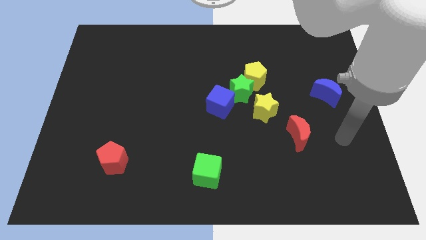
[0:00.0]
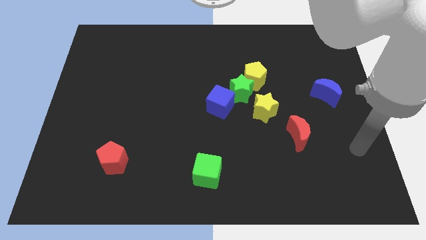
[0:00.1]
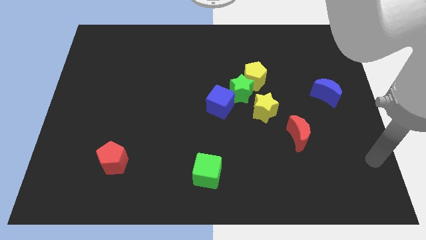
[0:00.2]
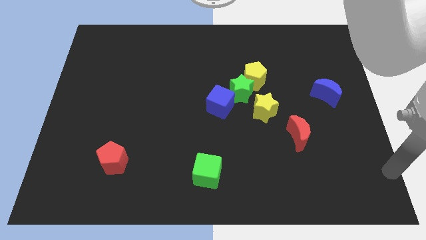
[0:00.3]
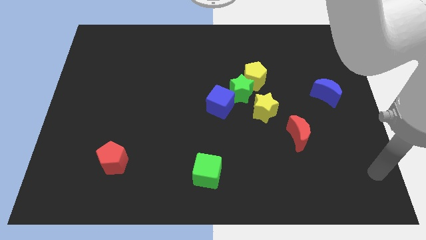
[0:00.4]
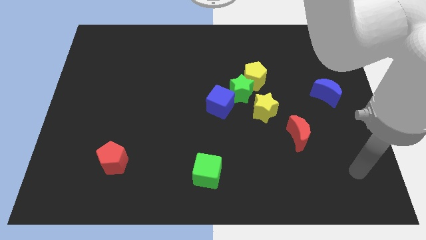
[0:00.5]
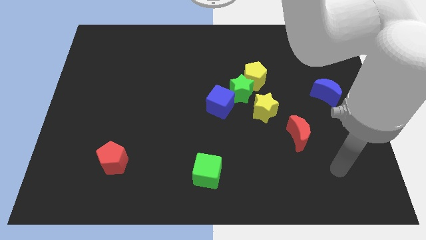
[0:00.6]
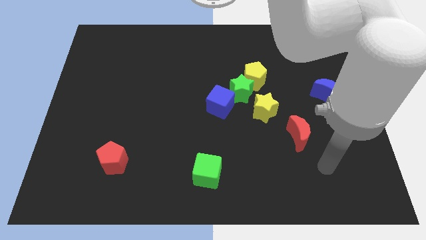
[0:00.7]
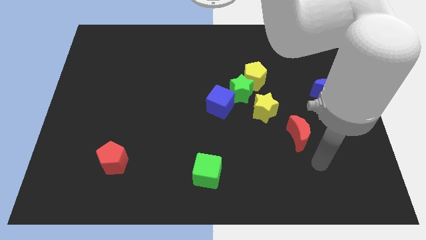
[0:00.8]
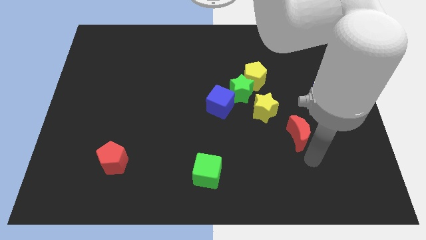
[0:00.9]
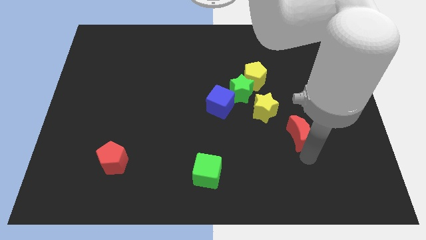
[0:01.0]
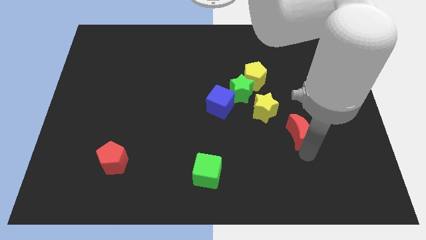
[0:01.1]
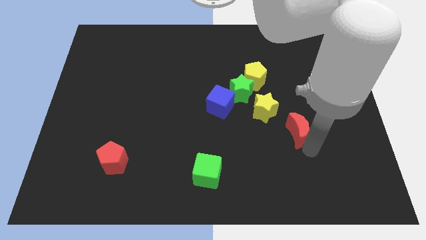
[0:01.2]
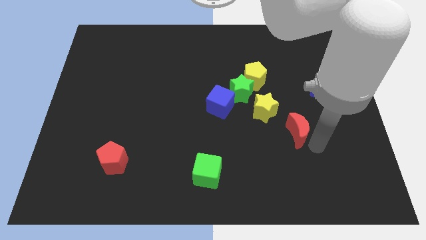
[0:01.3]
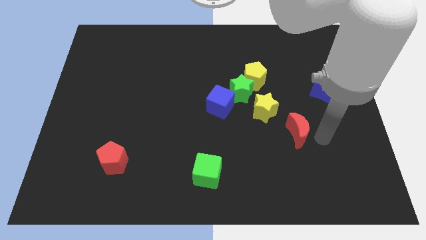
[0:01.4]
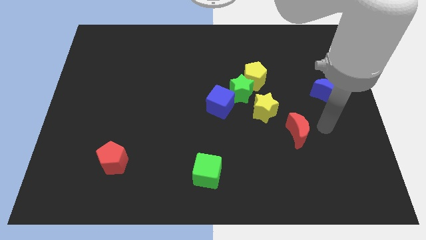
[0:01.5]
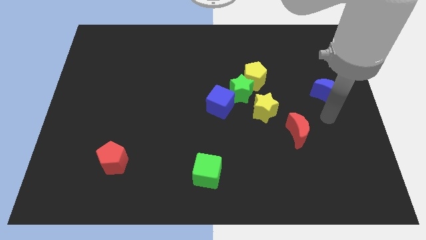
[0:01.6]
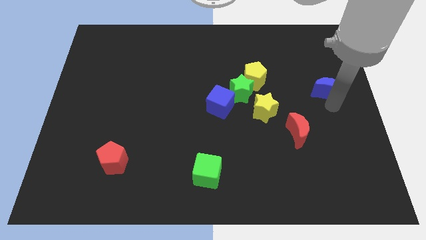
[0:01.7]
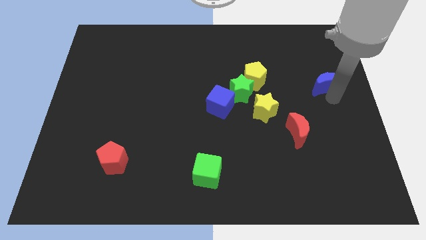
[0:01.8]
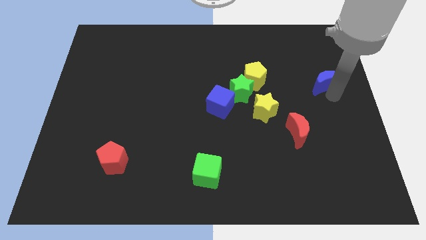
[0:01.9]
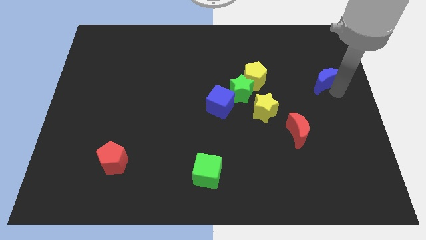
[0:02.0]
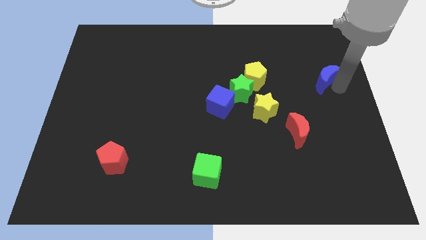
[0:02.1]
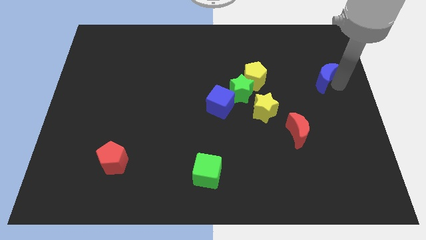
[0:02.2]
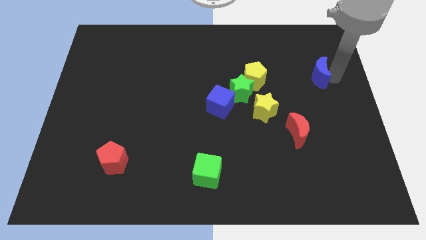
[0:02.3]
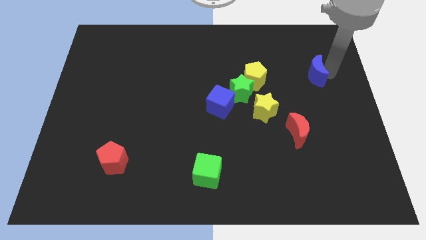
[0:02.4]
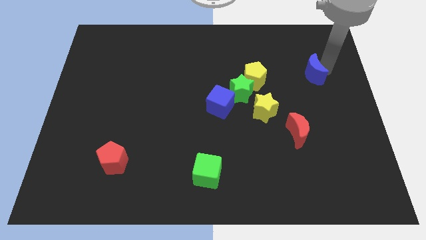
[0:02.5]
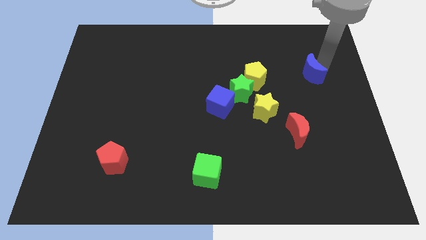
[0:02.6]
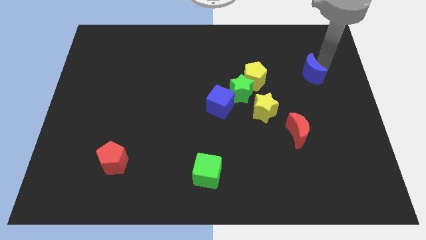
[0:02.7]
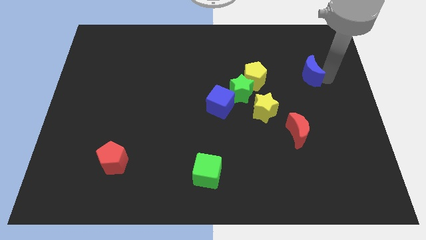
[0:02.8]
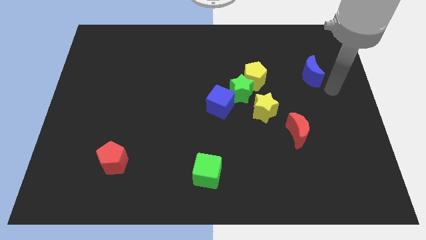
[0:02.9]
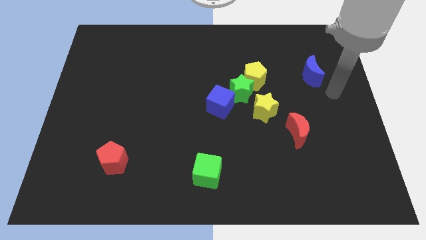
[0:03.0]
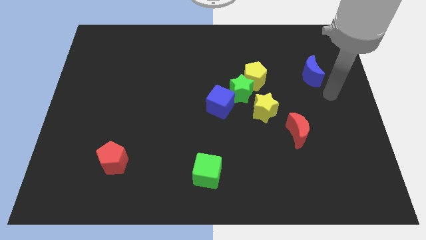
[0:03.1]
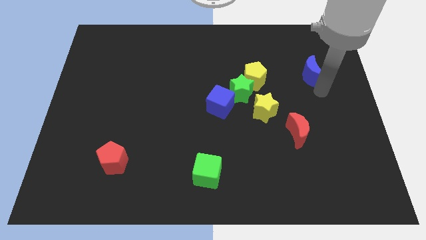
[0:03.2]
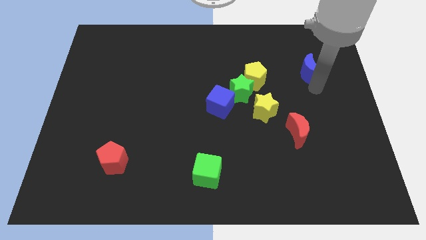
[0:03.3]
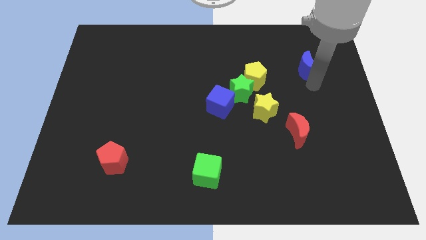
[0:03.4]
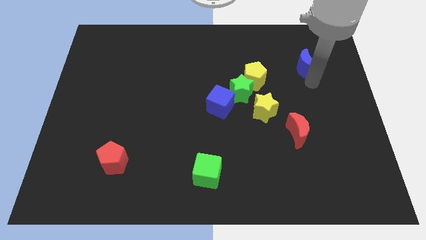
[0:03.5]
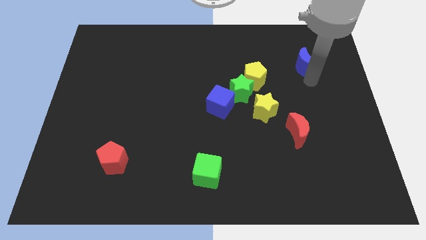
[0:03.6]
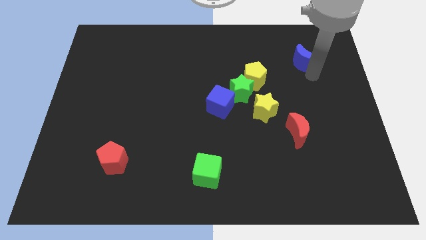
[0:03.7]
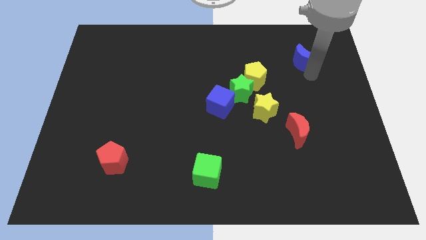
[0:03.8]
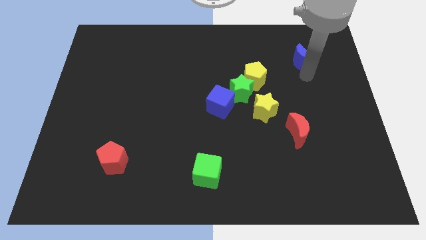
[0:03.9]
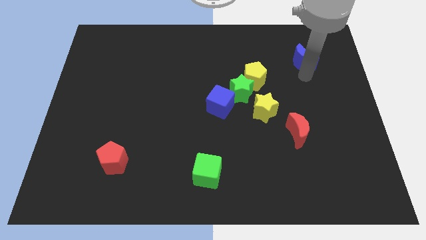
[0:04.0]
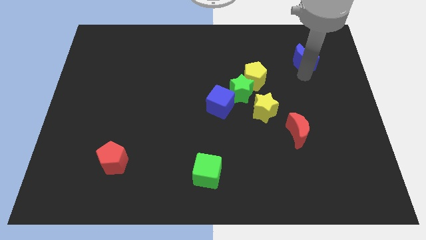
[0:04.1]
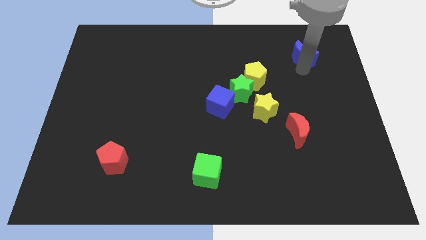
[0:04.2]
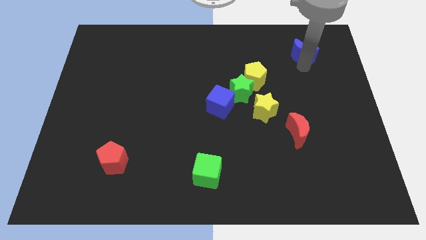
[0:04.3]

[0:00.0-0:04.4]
move the blue crescent slightly towards up

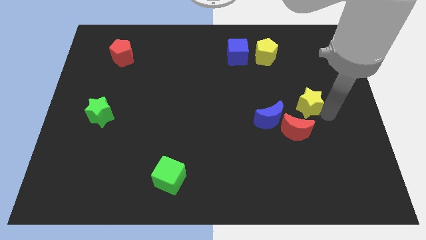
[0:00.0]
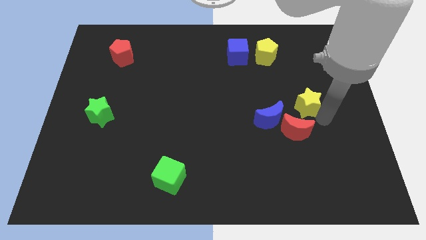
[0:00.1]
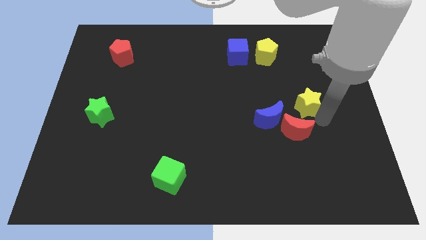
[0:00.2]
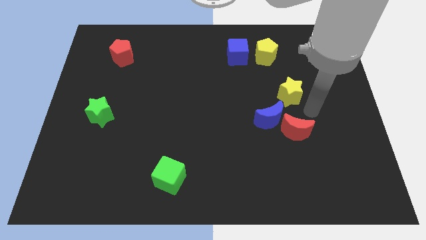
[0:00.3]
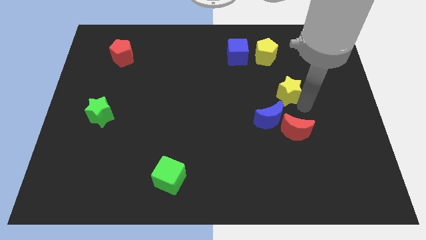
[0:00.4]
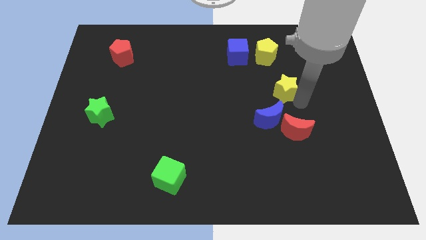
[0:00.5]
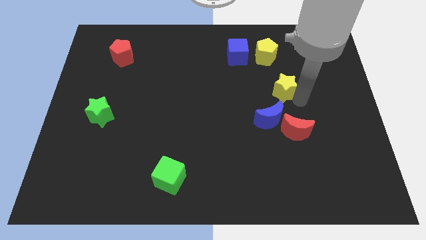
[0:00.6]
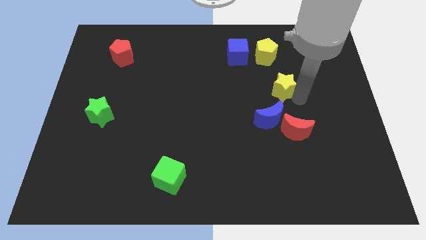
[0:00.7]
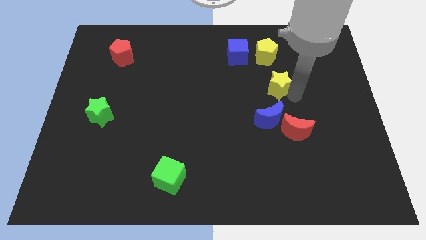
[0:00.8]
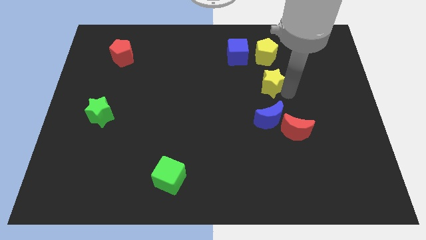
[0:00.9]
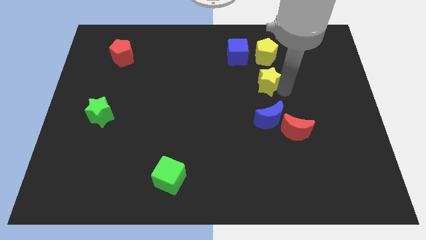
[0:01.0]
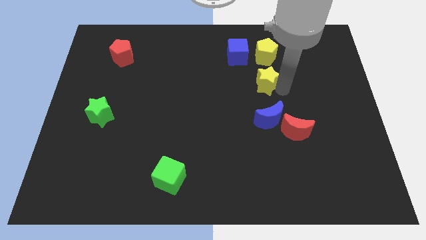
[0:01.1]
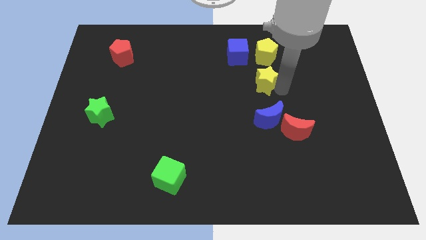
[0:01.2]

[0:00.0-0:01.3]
move the yellow star below the yellow pentagon

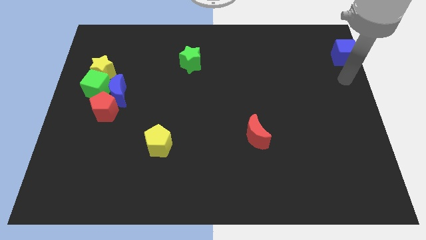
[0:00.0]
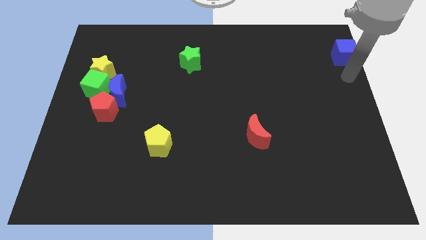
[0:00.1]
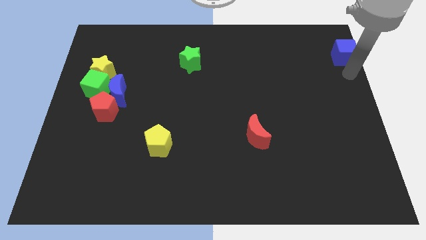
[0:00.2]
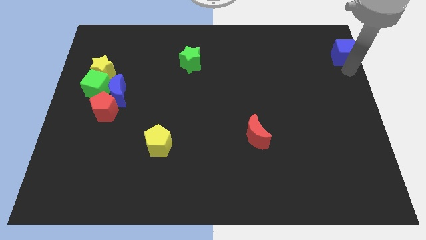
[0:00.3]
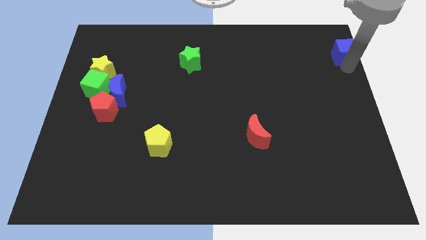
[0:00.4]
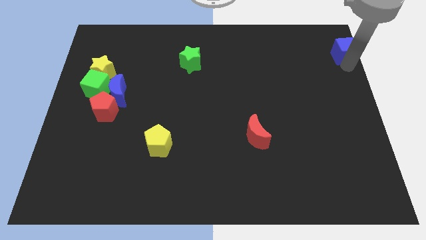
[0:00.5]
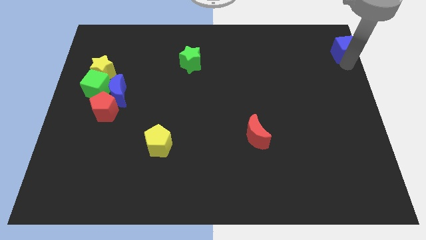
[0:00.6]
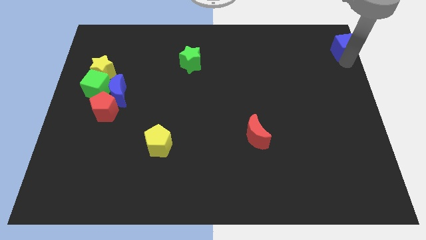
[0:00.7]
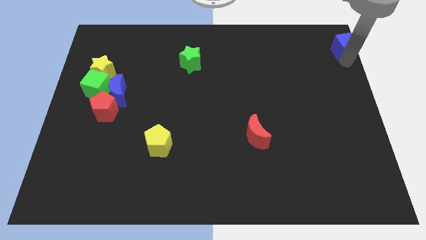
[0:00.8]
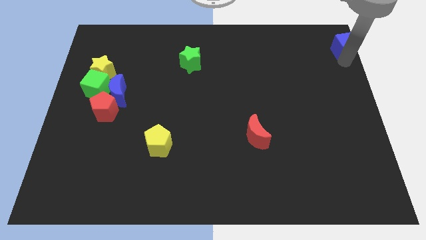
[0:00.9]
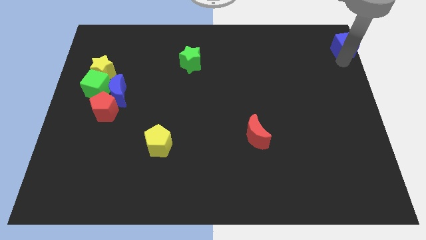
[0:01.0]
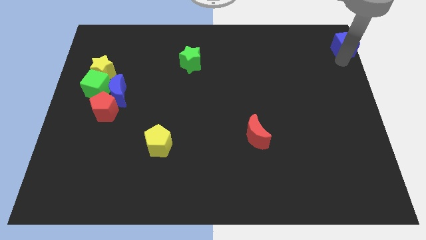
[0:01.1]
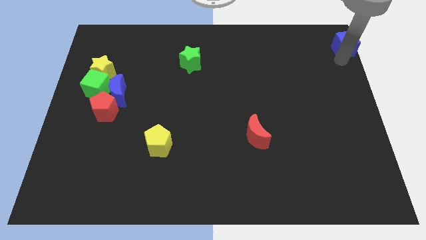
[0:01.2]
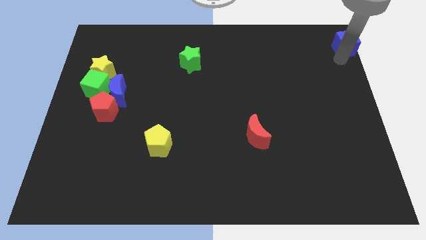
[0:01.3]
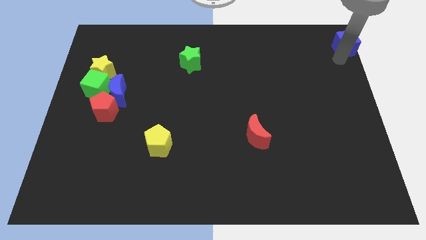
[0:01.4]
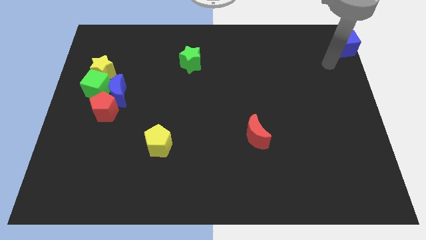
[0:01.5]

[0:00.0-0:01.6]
push the blue cube towards the top right corner of the board

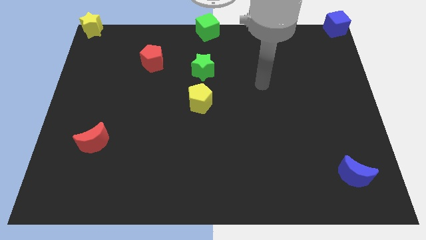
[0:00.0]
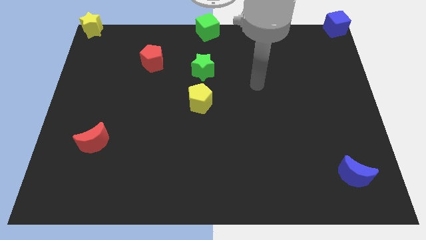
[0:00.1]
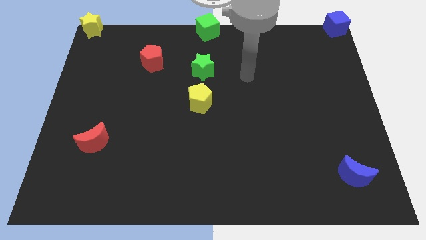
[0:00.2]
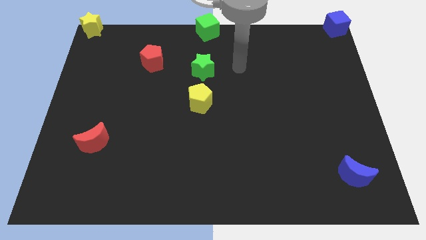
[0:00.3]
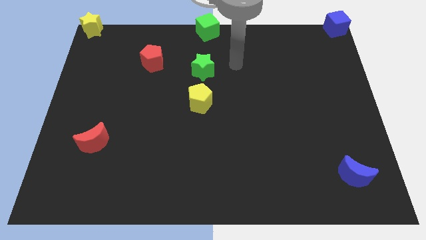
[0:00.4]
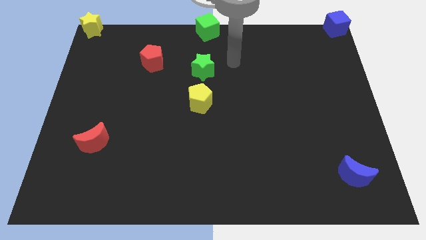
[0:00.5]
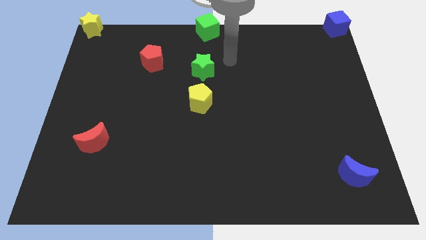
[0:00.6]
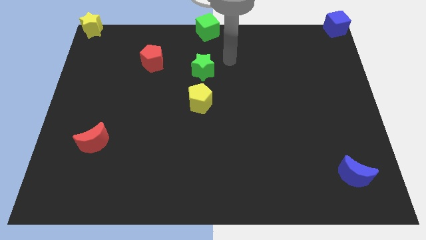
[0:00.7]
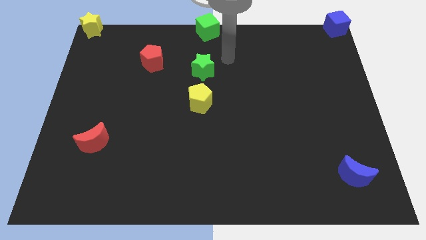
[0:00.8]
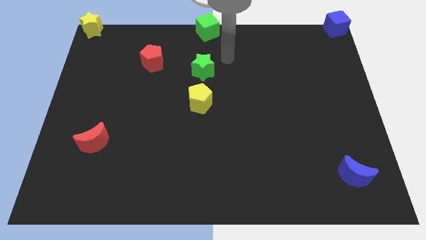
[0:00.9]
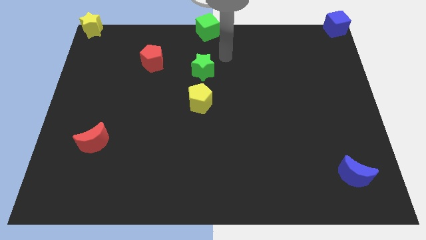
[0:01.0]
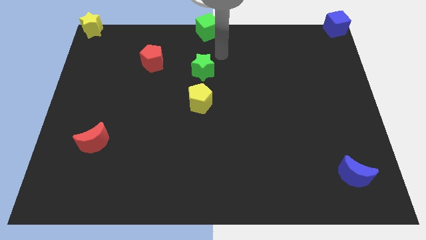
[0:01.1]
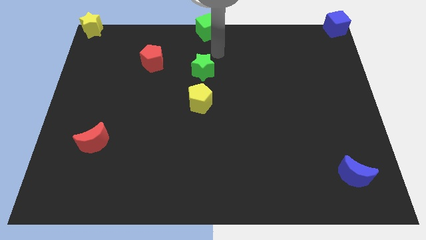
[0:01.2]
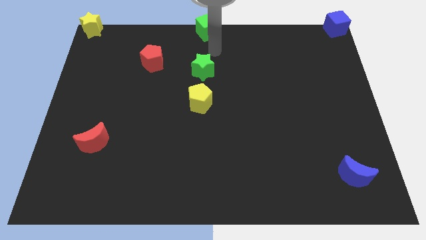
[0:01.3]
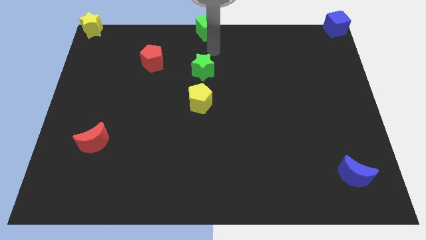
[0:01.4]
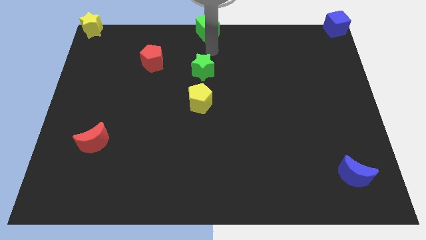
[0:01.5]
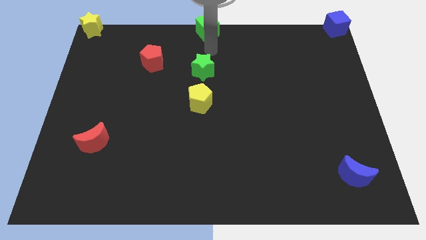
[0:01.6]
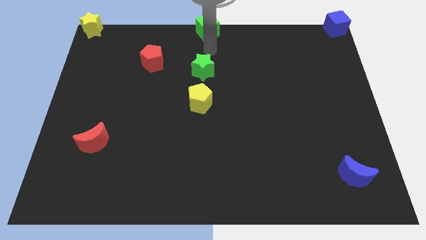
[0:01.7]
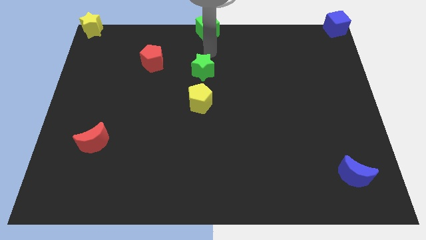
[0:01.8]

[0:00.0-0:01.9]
move your arm towards green star
